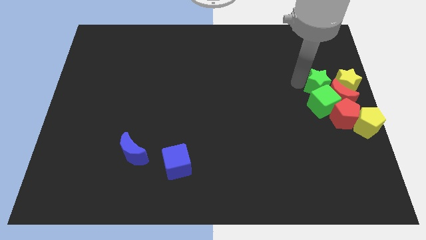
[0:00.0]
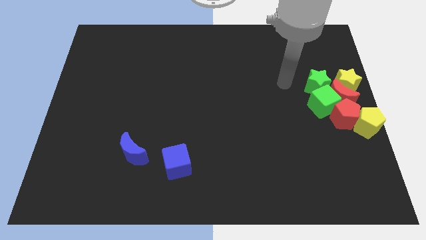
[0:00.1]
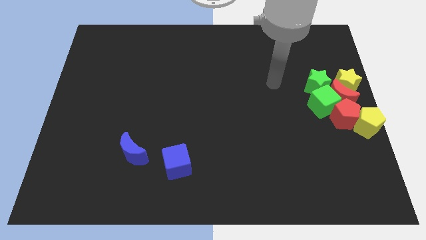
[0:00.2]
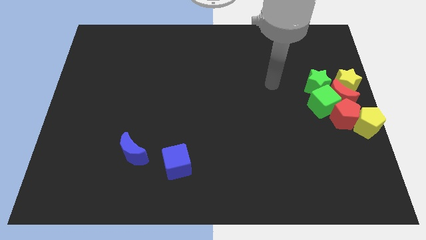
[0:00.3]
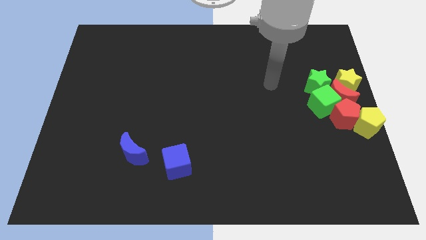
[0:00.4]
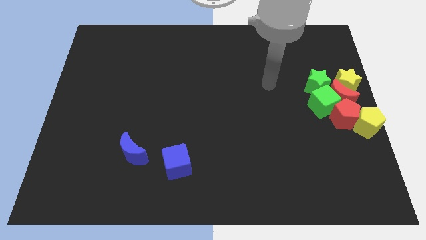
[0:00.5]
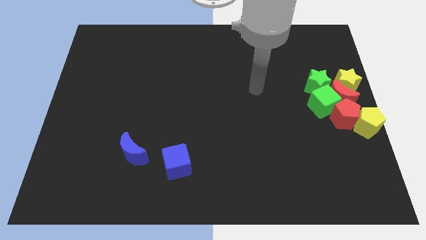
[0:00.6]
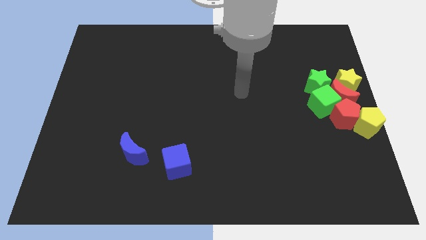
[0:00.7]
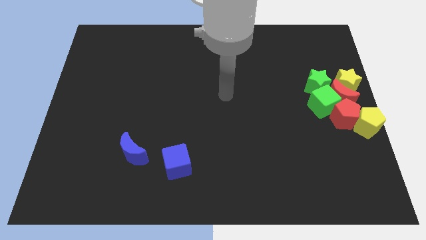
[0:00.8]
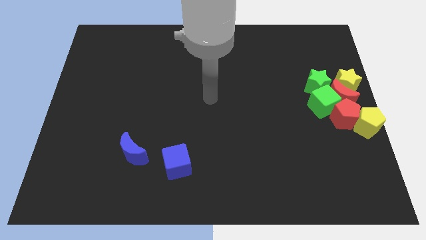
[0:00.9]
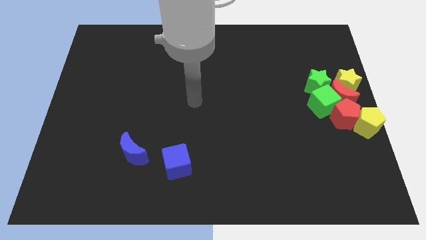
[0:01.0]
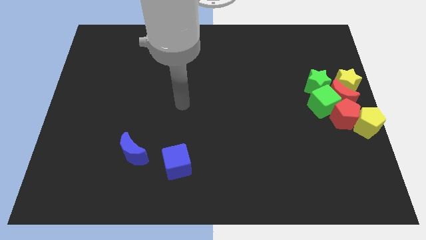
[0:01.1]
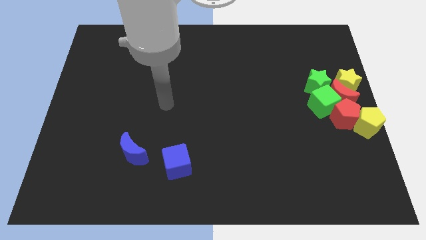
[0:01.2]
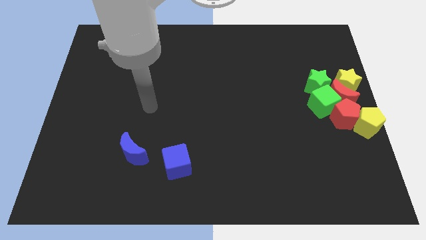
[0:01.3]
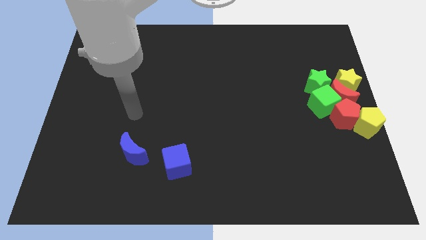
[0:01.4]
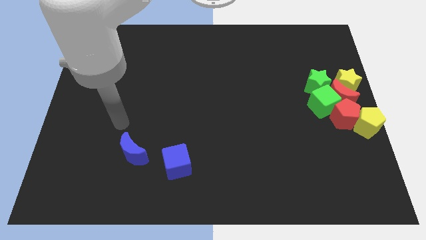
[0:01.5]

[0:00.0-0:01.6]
move arm away from the green blocks

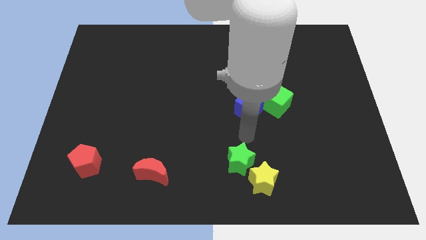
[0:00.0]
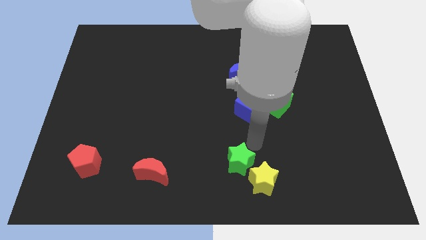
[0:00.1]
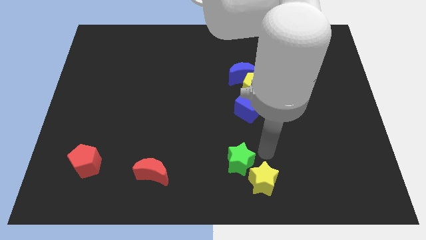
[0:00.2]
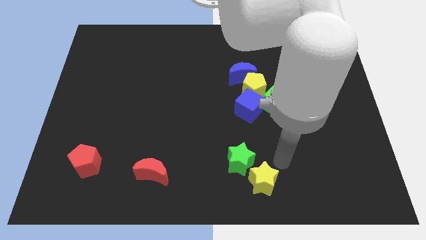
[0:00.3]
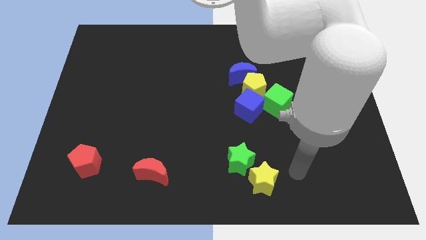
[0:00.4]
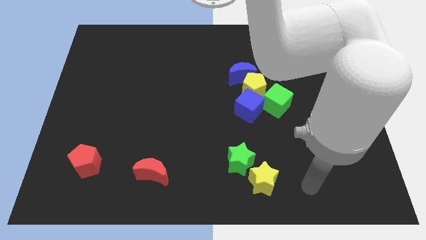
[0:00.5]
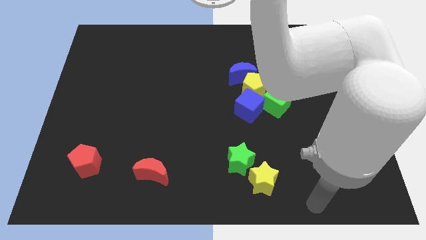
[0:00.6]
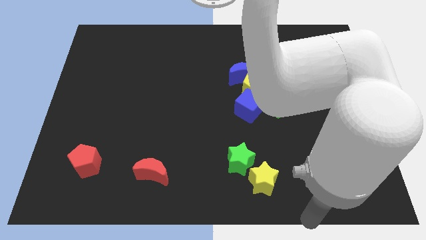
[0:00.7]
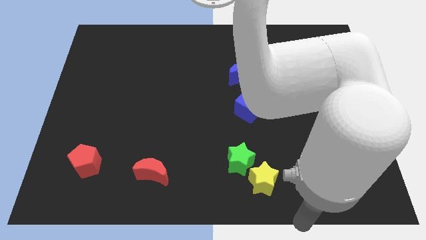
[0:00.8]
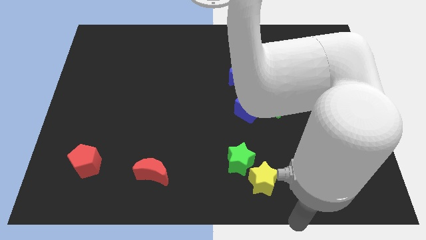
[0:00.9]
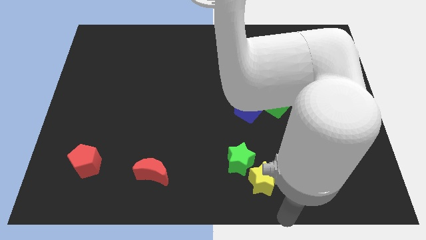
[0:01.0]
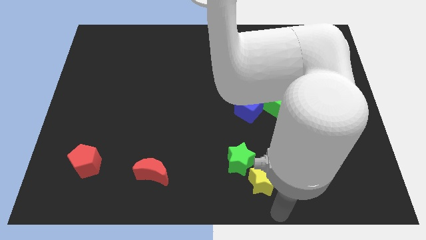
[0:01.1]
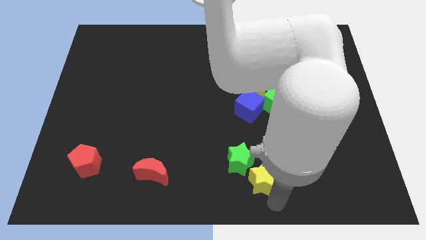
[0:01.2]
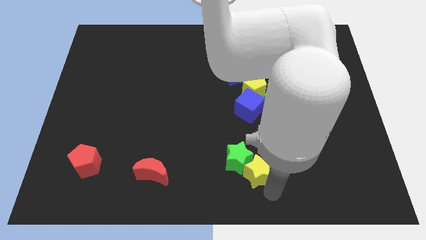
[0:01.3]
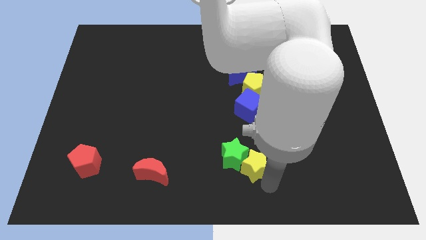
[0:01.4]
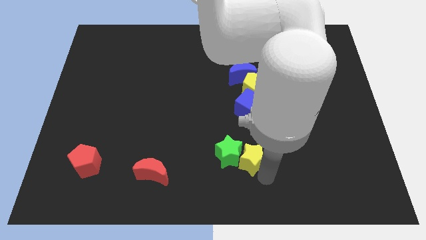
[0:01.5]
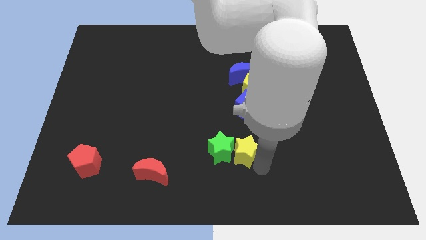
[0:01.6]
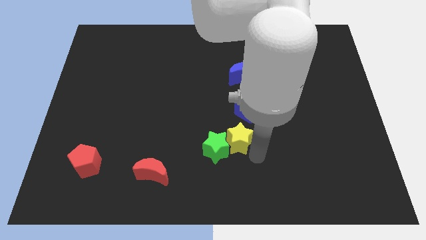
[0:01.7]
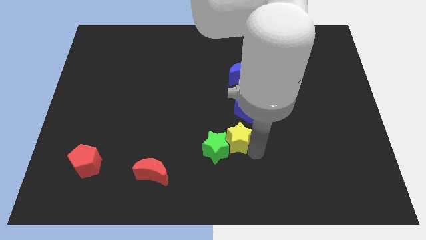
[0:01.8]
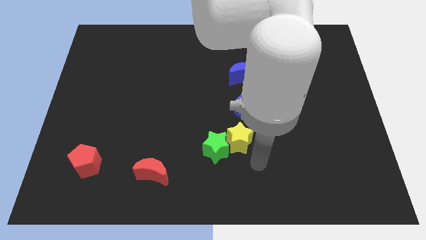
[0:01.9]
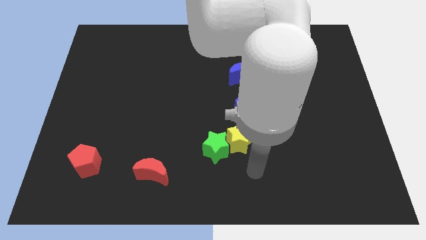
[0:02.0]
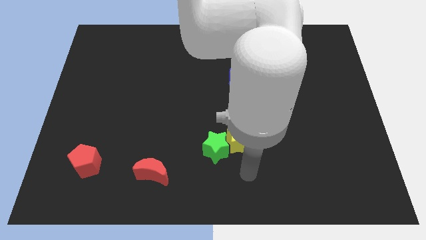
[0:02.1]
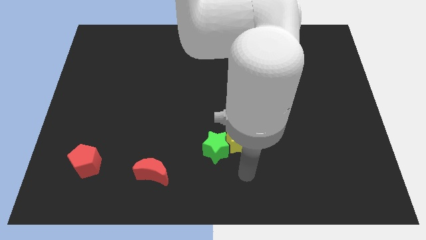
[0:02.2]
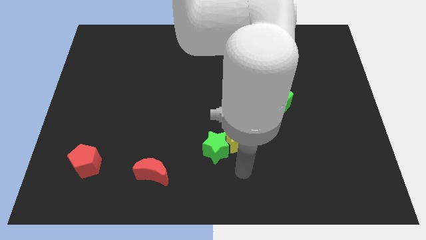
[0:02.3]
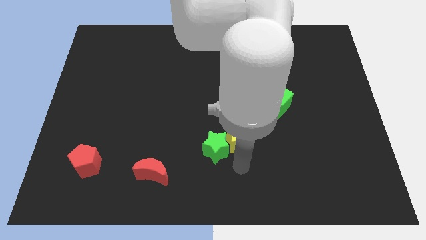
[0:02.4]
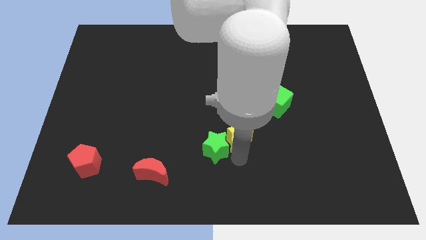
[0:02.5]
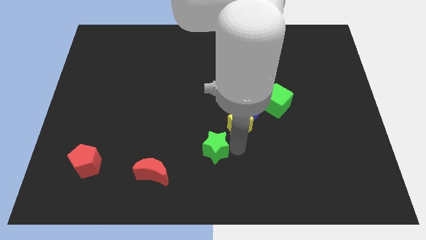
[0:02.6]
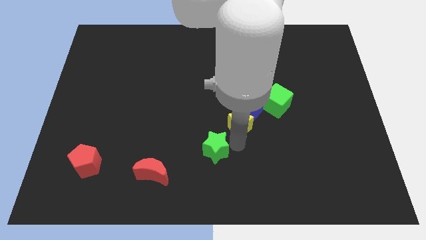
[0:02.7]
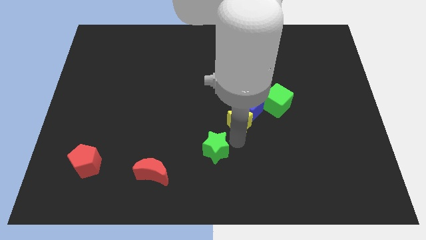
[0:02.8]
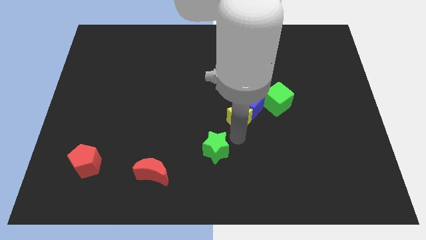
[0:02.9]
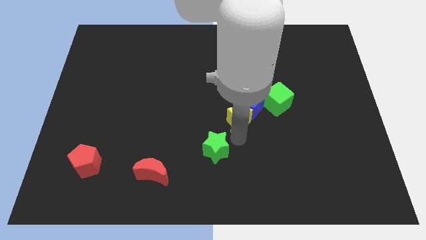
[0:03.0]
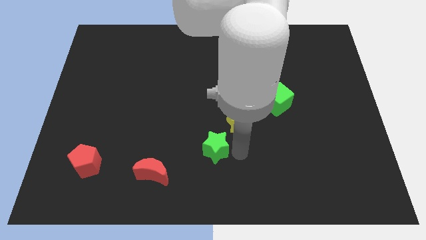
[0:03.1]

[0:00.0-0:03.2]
slide the yellow star into the bottom side of the blue cube

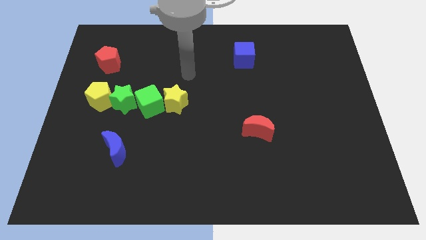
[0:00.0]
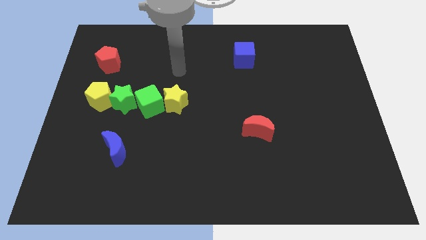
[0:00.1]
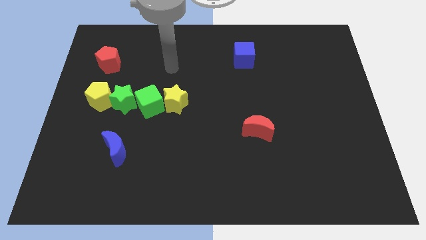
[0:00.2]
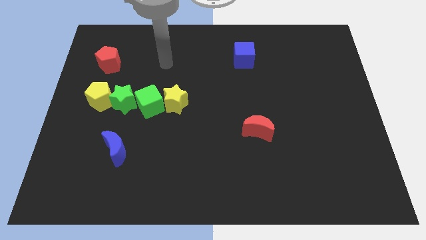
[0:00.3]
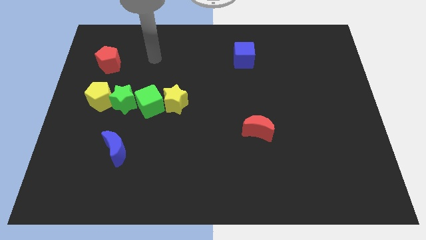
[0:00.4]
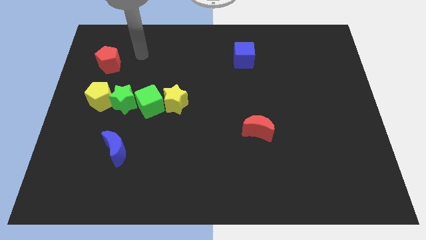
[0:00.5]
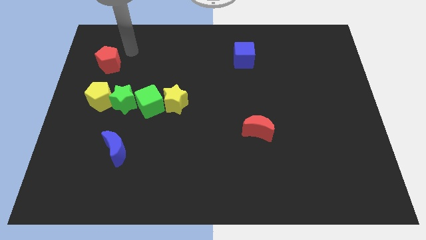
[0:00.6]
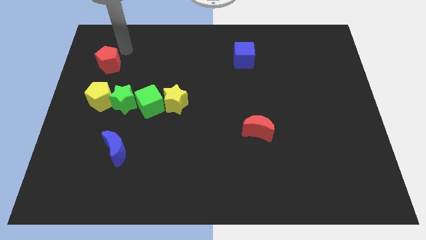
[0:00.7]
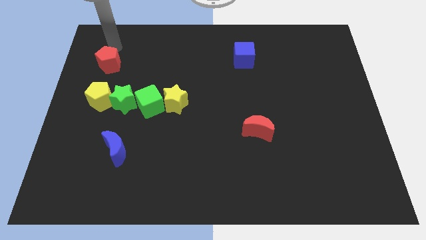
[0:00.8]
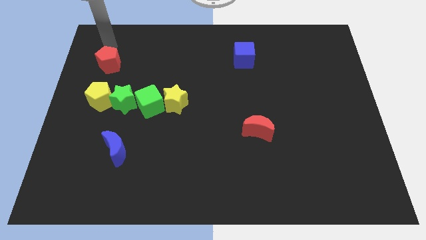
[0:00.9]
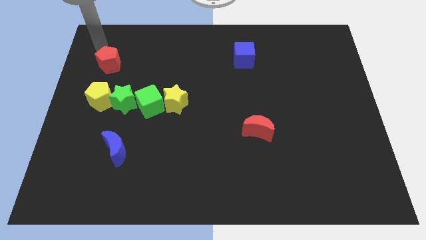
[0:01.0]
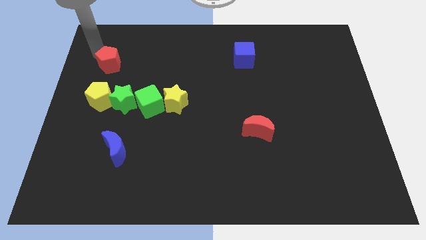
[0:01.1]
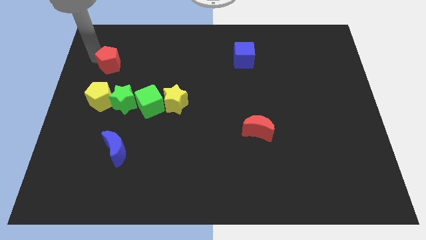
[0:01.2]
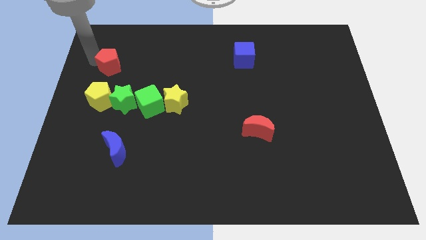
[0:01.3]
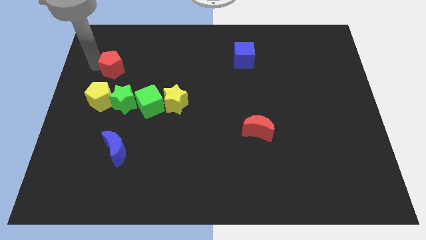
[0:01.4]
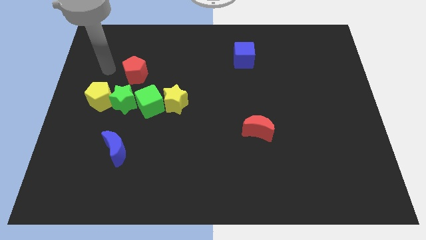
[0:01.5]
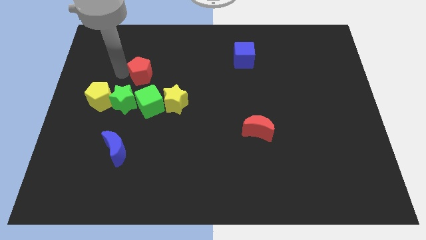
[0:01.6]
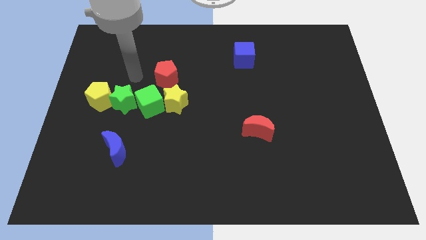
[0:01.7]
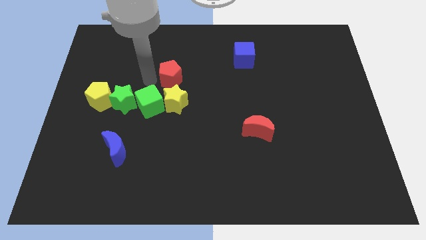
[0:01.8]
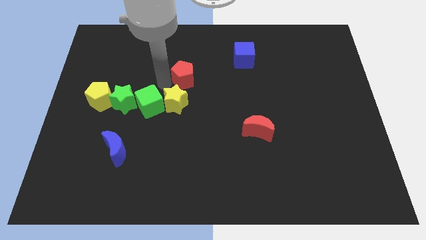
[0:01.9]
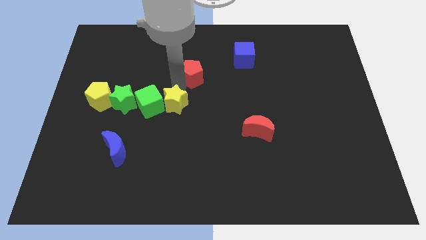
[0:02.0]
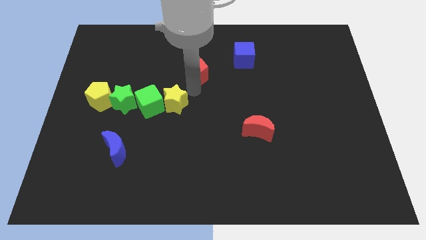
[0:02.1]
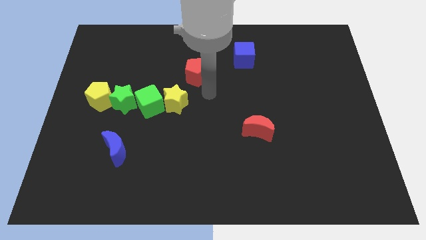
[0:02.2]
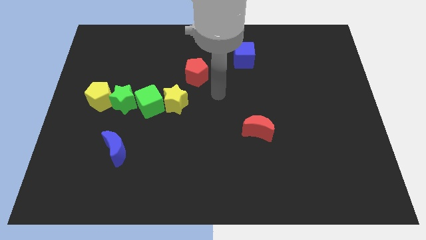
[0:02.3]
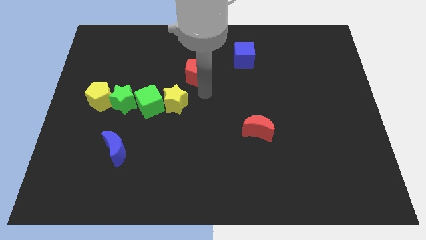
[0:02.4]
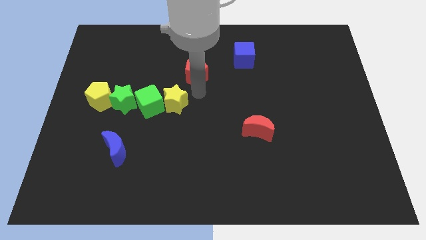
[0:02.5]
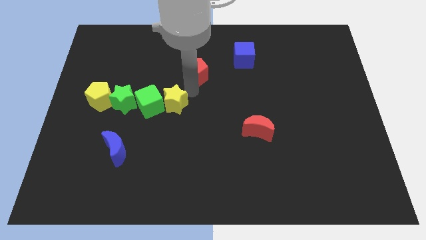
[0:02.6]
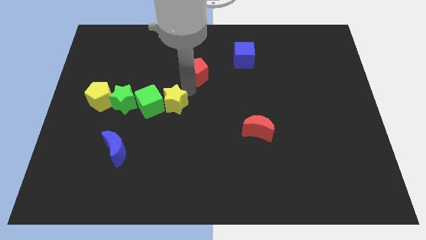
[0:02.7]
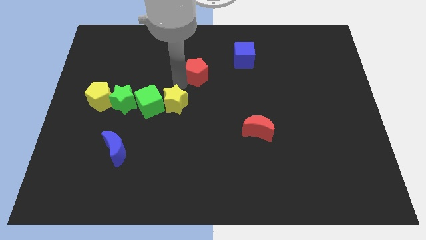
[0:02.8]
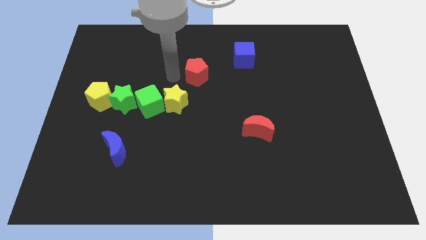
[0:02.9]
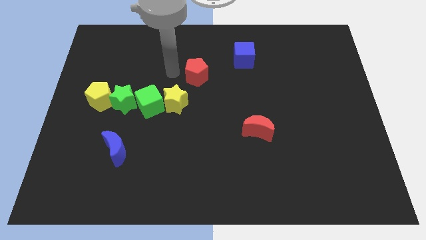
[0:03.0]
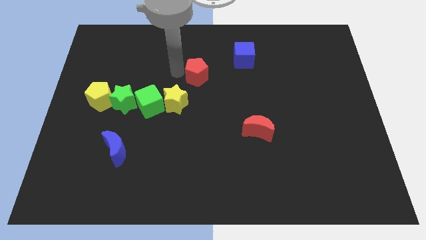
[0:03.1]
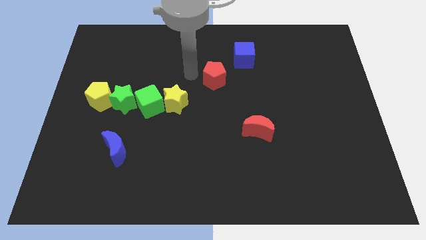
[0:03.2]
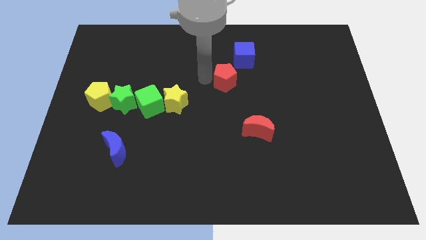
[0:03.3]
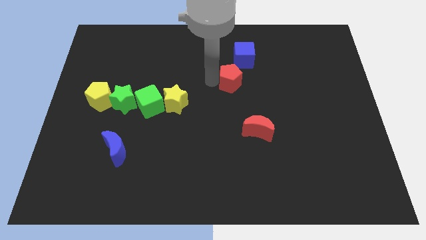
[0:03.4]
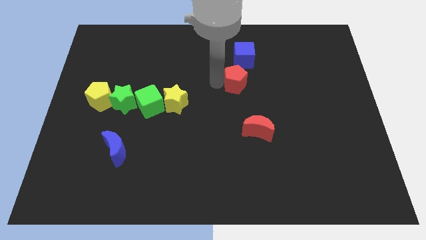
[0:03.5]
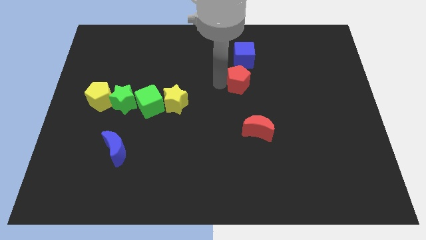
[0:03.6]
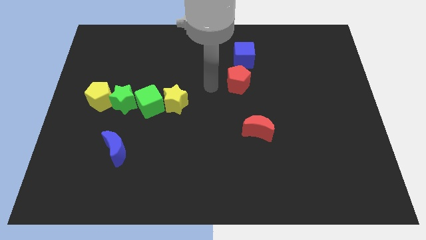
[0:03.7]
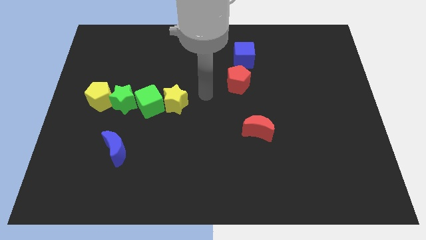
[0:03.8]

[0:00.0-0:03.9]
drag the red pentagon to the center

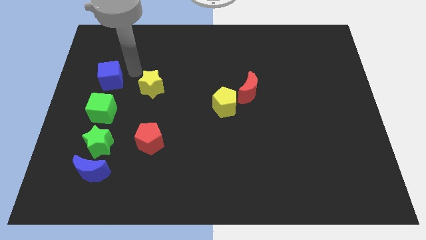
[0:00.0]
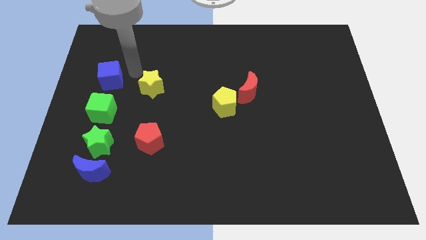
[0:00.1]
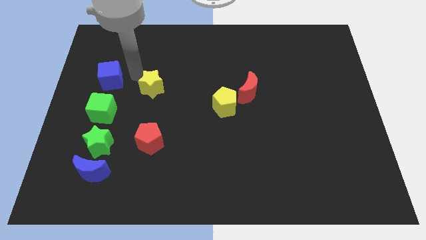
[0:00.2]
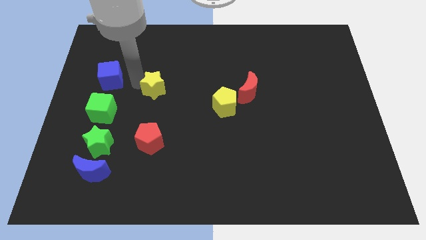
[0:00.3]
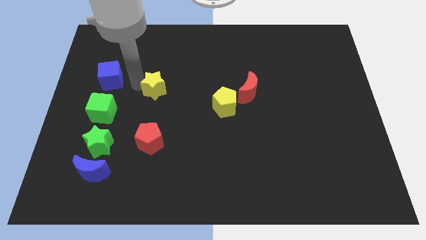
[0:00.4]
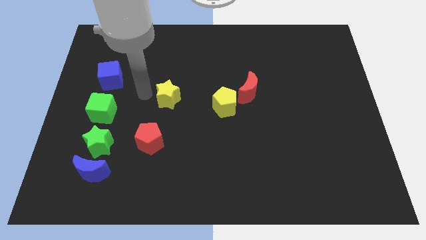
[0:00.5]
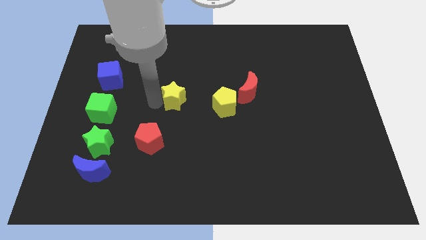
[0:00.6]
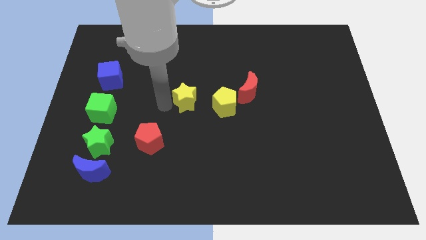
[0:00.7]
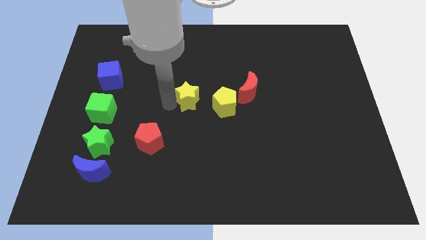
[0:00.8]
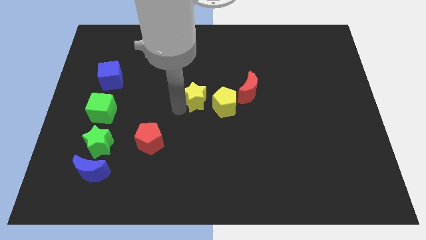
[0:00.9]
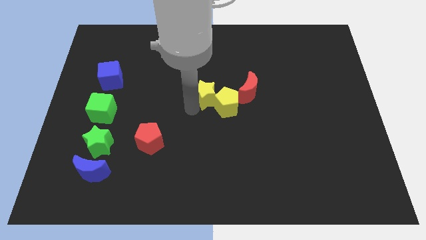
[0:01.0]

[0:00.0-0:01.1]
push yellow star into yellow pentagon
